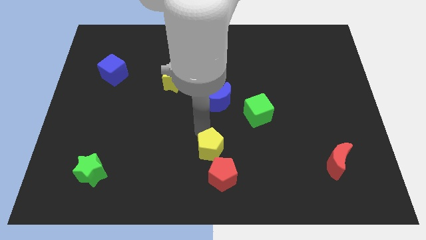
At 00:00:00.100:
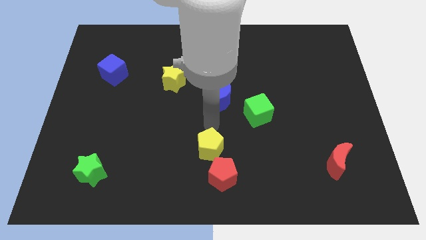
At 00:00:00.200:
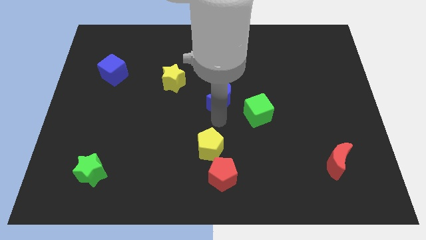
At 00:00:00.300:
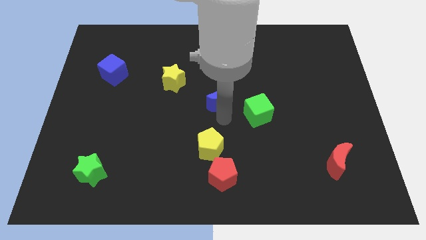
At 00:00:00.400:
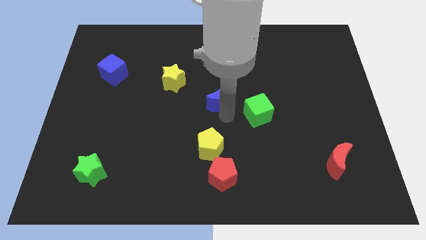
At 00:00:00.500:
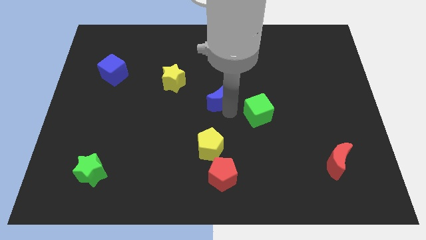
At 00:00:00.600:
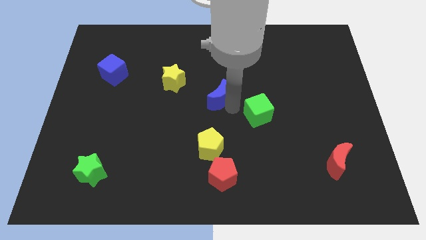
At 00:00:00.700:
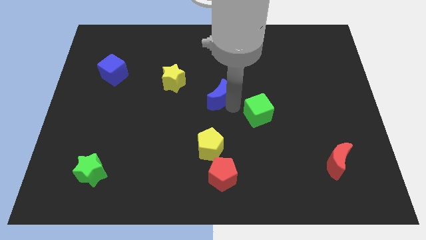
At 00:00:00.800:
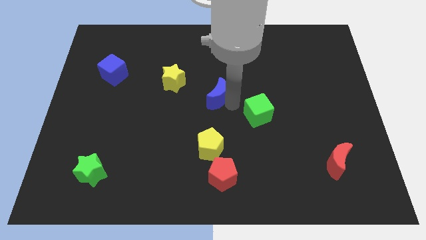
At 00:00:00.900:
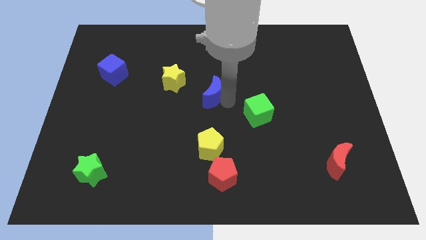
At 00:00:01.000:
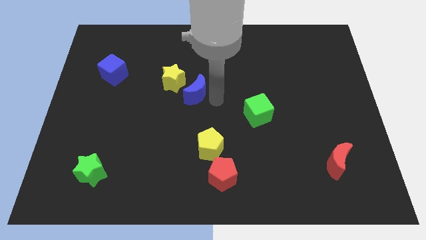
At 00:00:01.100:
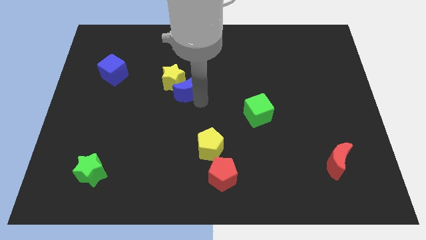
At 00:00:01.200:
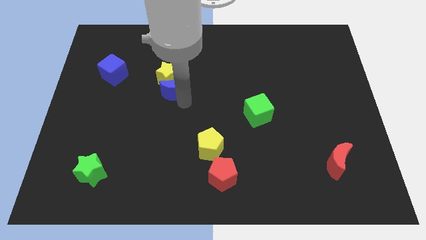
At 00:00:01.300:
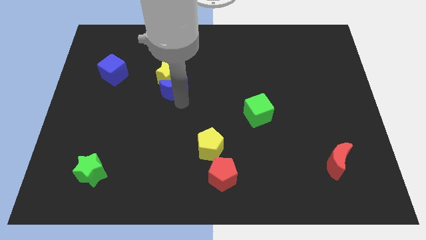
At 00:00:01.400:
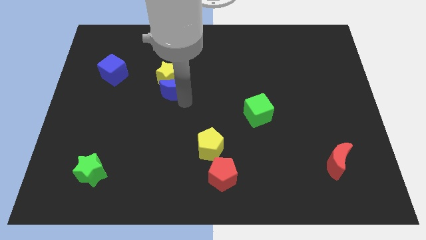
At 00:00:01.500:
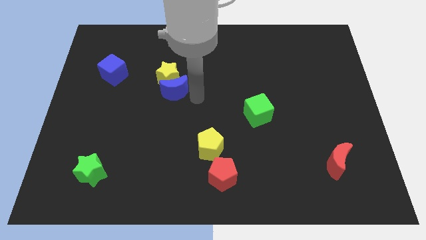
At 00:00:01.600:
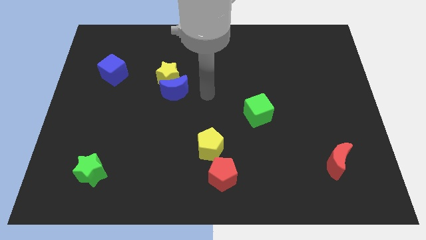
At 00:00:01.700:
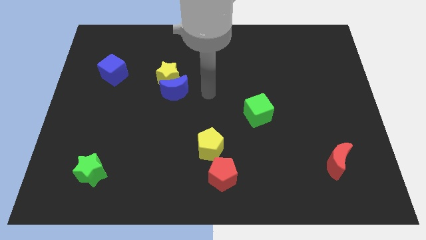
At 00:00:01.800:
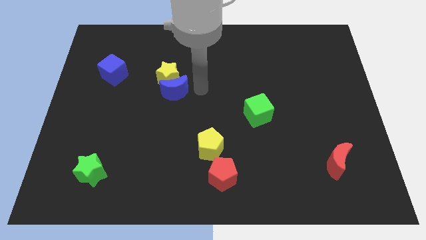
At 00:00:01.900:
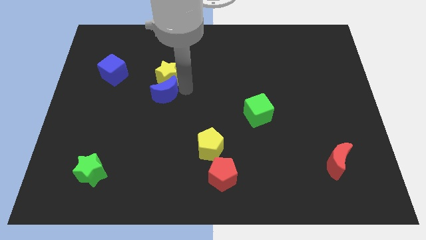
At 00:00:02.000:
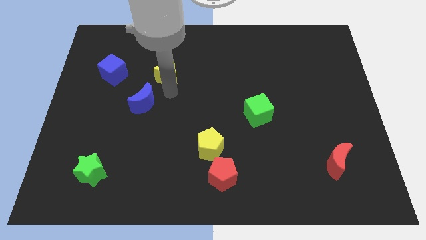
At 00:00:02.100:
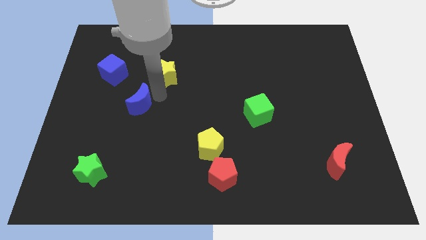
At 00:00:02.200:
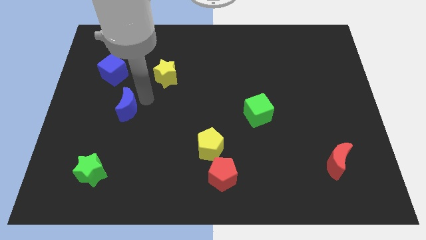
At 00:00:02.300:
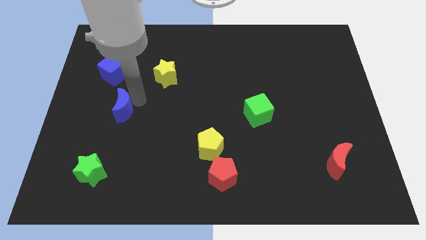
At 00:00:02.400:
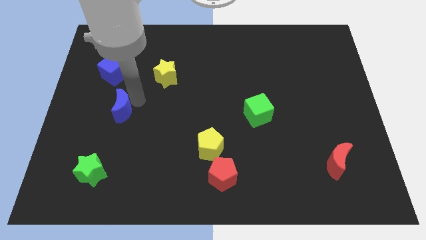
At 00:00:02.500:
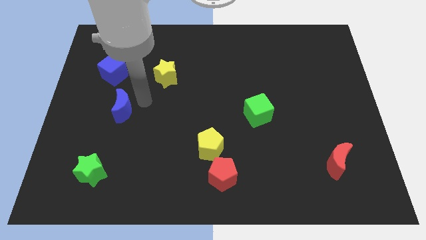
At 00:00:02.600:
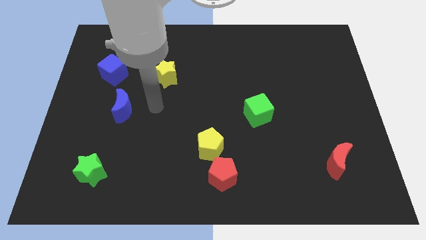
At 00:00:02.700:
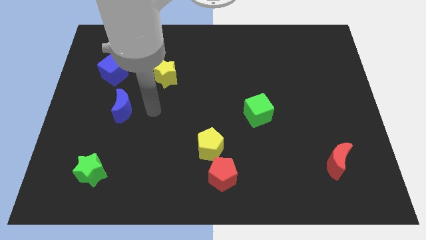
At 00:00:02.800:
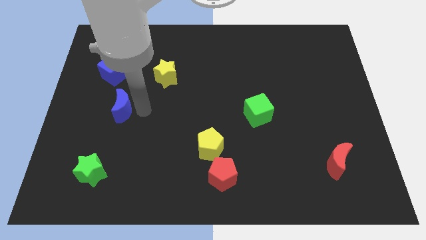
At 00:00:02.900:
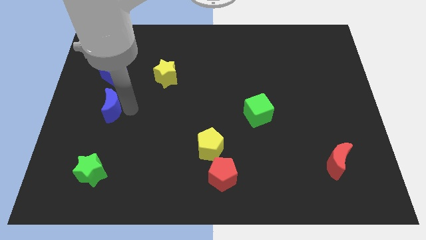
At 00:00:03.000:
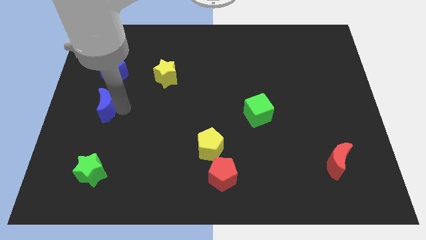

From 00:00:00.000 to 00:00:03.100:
place the blue crescent vertically to the bottoms side of the blue cube

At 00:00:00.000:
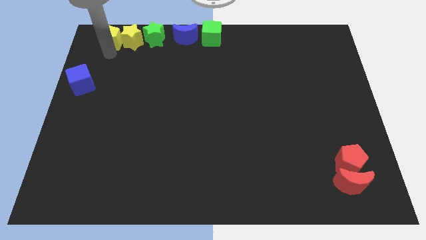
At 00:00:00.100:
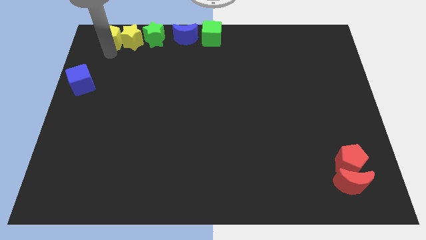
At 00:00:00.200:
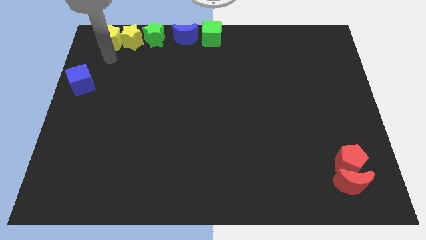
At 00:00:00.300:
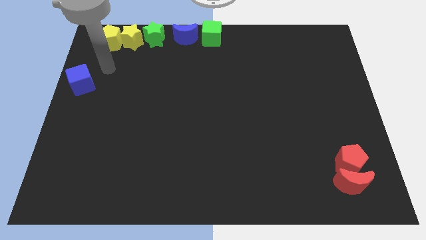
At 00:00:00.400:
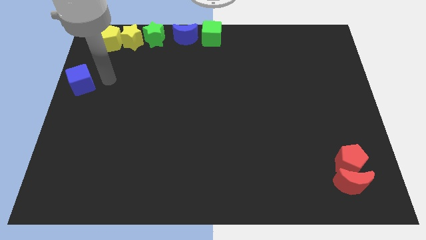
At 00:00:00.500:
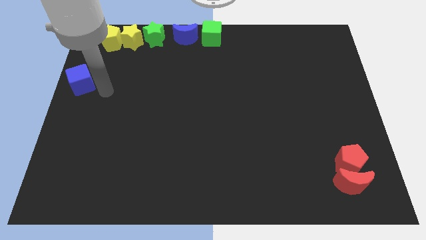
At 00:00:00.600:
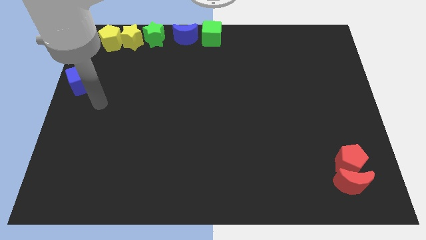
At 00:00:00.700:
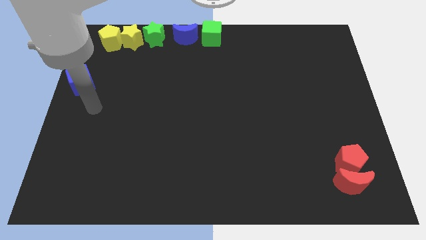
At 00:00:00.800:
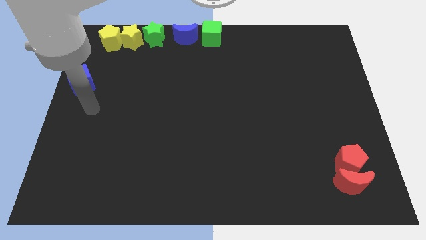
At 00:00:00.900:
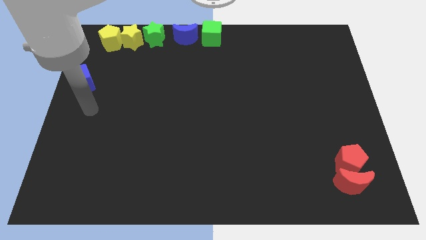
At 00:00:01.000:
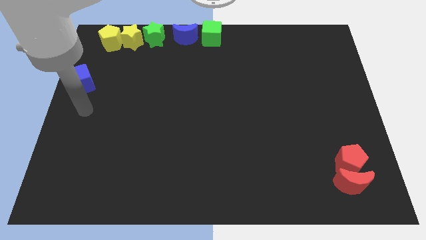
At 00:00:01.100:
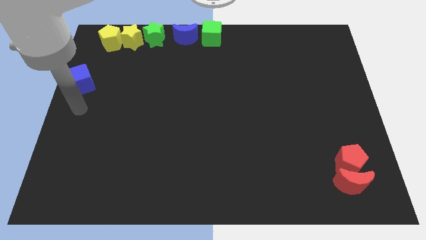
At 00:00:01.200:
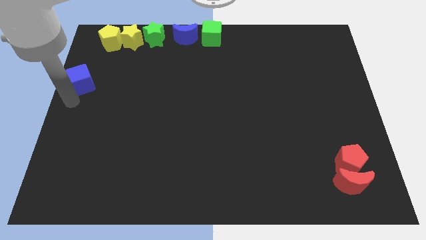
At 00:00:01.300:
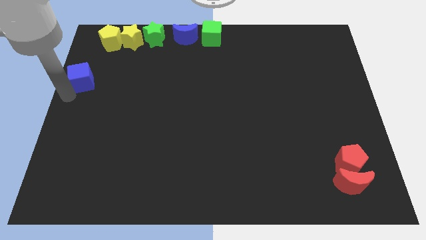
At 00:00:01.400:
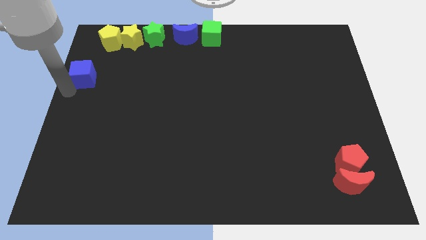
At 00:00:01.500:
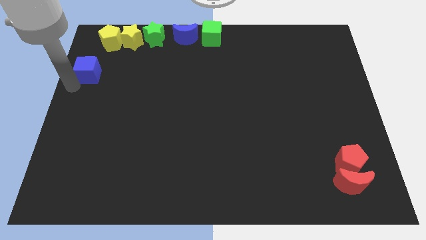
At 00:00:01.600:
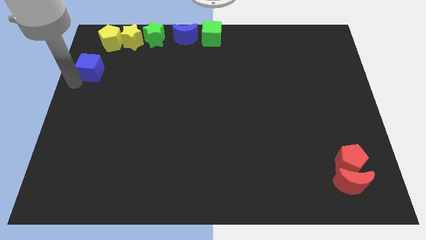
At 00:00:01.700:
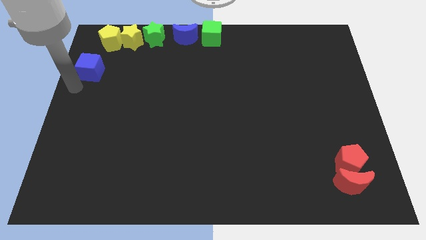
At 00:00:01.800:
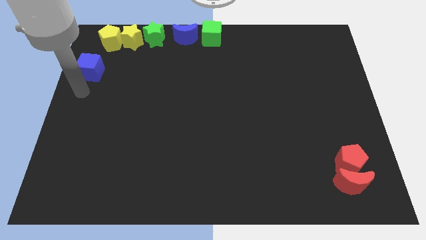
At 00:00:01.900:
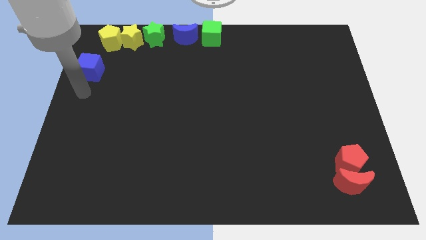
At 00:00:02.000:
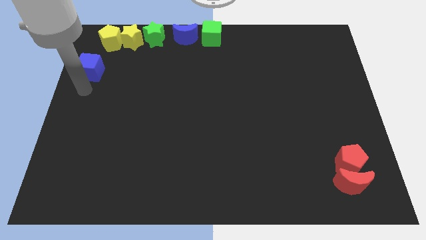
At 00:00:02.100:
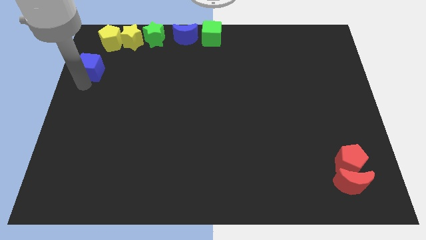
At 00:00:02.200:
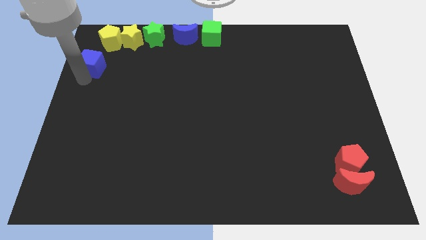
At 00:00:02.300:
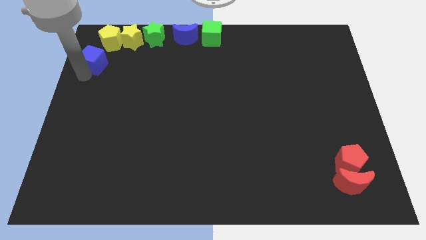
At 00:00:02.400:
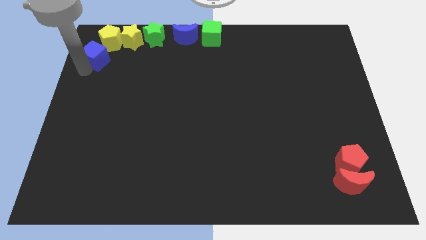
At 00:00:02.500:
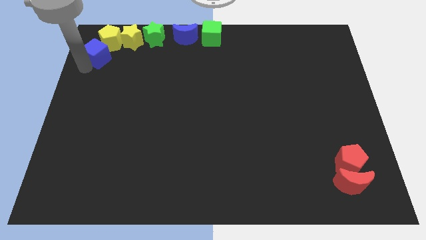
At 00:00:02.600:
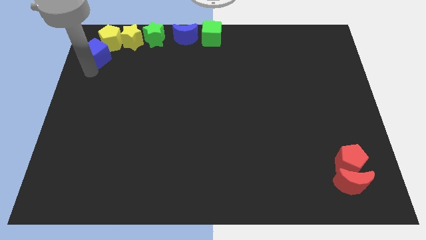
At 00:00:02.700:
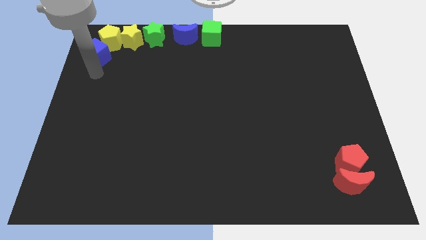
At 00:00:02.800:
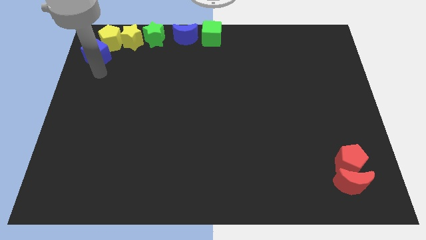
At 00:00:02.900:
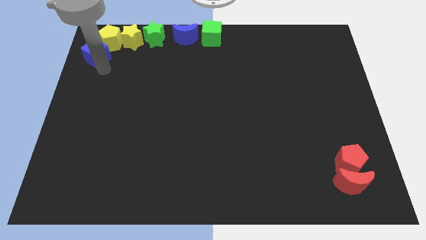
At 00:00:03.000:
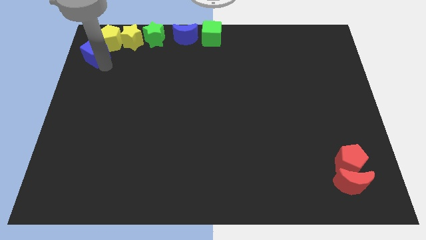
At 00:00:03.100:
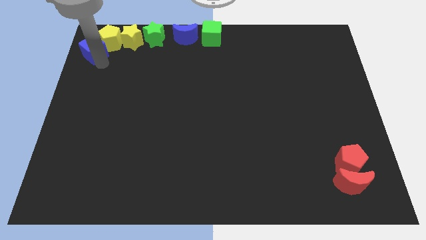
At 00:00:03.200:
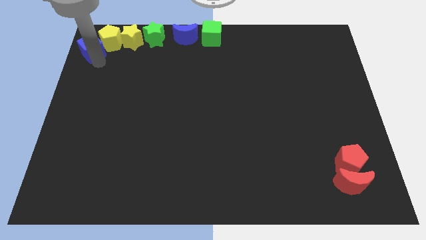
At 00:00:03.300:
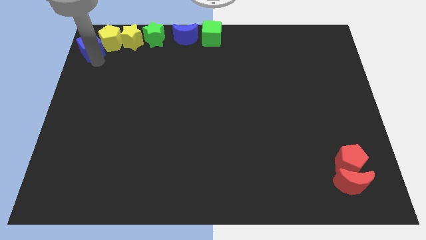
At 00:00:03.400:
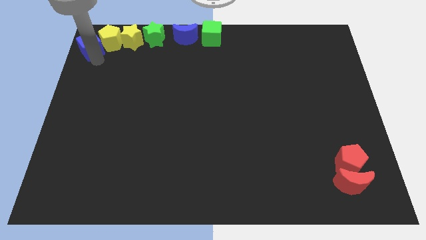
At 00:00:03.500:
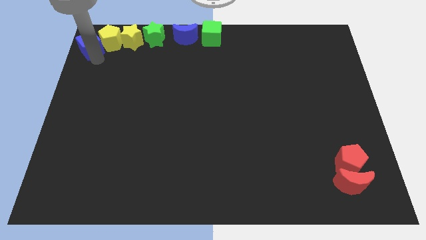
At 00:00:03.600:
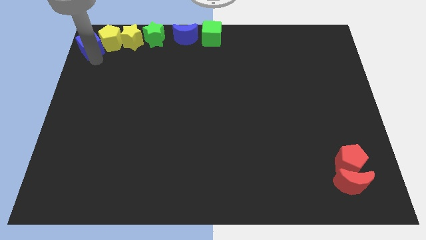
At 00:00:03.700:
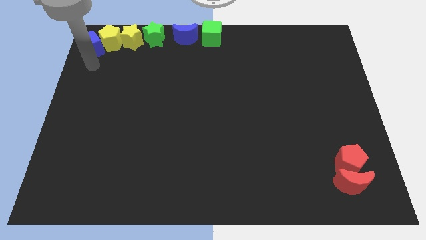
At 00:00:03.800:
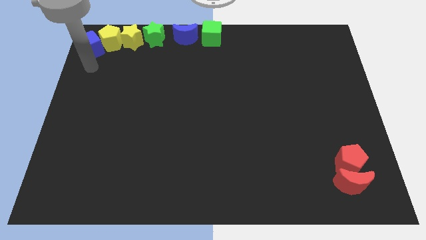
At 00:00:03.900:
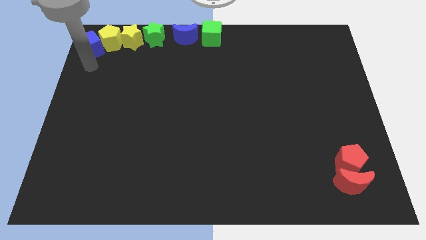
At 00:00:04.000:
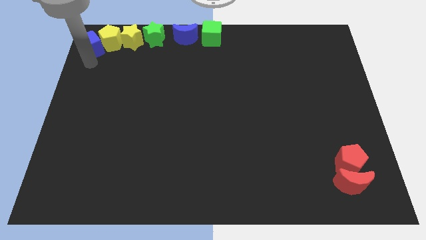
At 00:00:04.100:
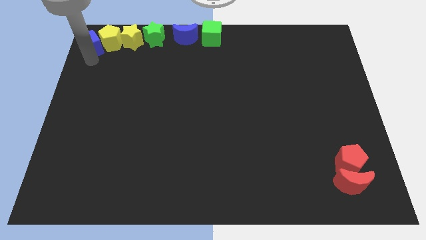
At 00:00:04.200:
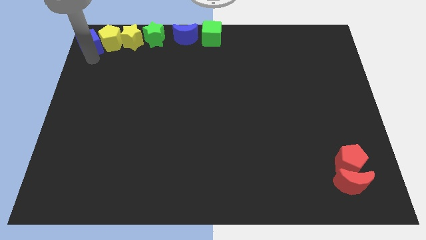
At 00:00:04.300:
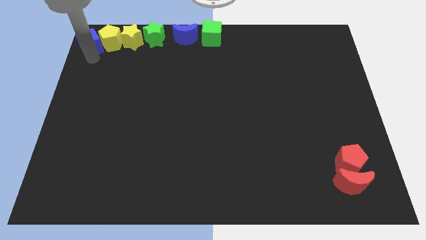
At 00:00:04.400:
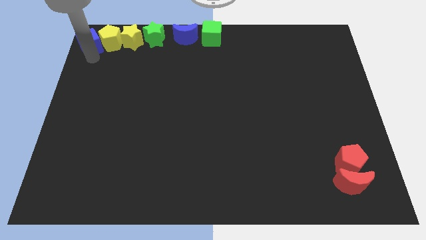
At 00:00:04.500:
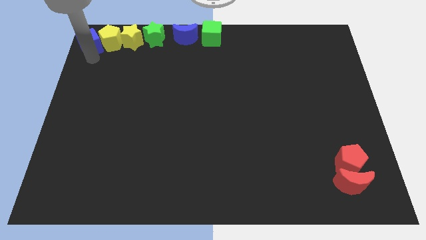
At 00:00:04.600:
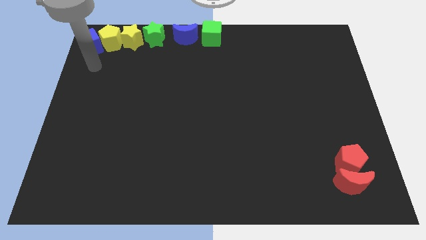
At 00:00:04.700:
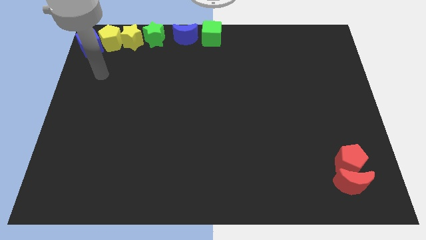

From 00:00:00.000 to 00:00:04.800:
place the blue cube to the left of the yellow pentagon

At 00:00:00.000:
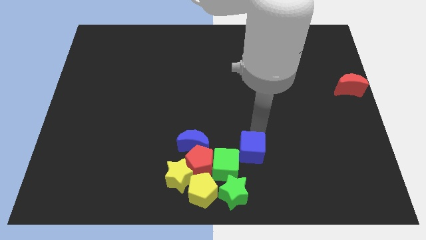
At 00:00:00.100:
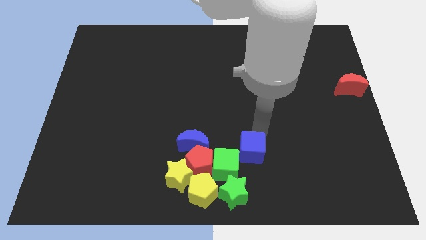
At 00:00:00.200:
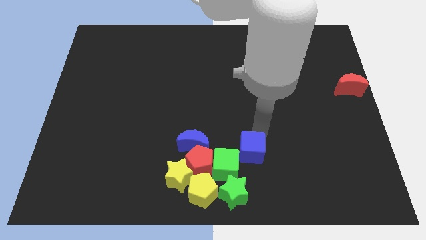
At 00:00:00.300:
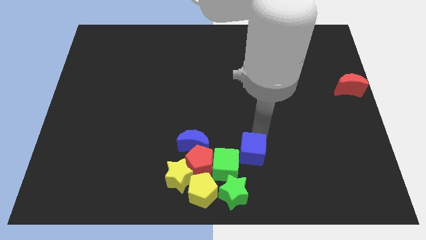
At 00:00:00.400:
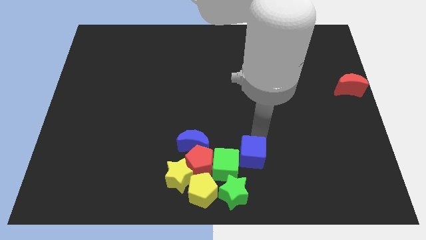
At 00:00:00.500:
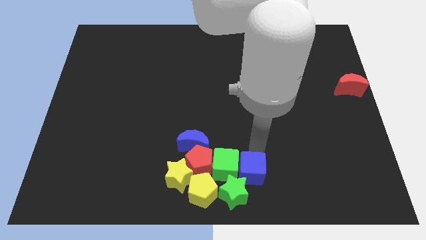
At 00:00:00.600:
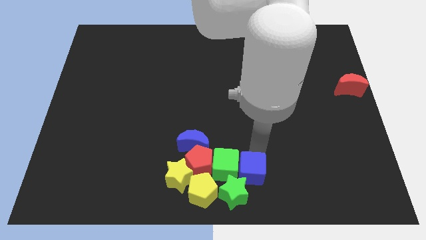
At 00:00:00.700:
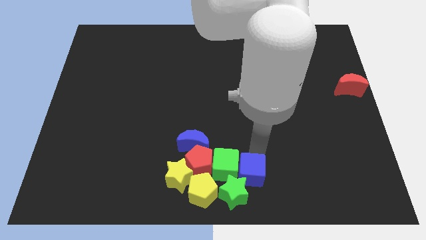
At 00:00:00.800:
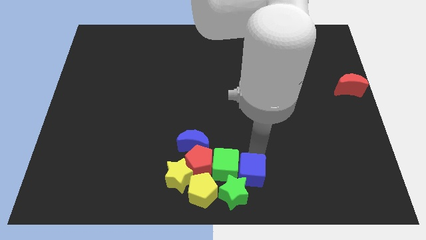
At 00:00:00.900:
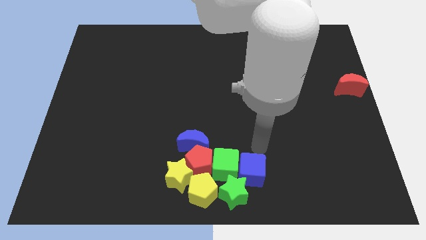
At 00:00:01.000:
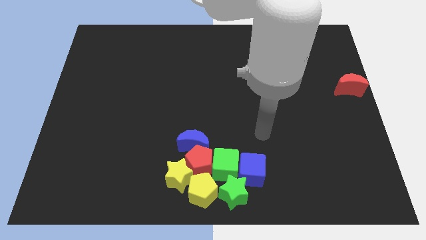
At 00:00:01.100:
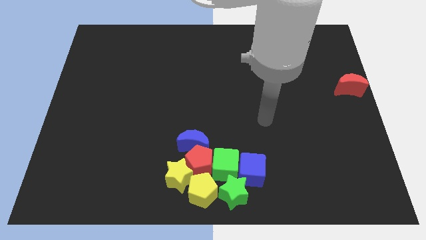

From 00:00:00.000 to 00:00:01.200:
move the blue cube right to the green cube
